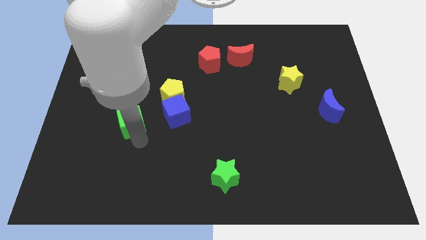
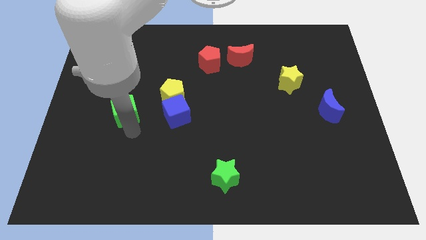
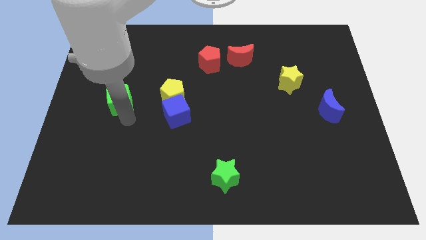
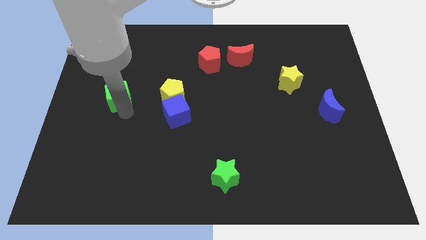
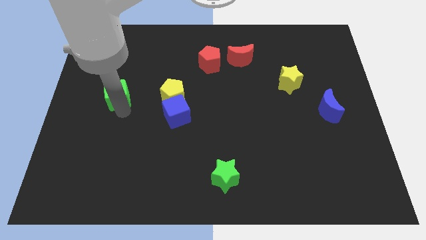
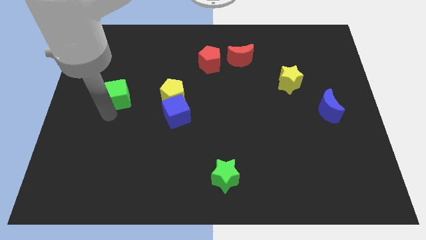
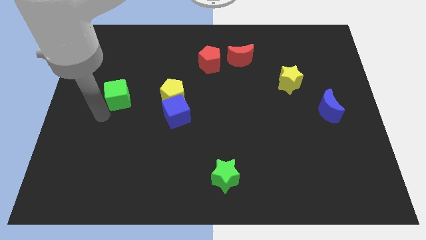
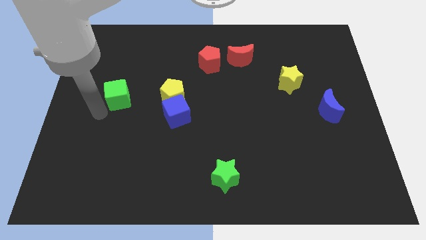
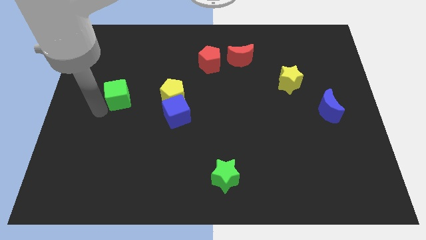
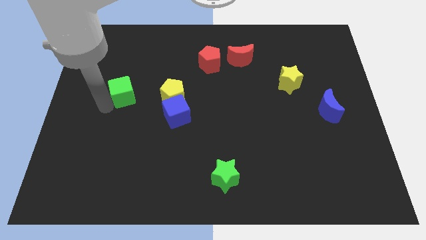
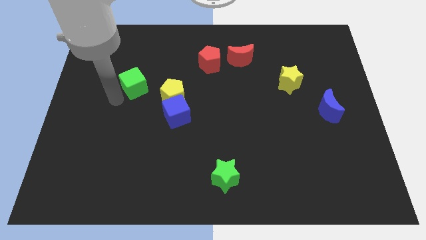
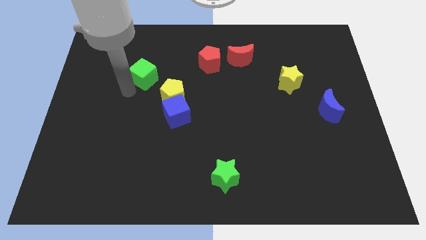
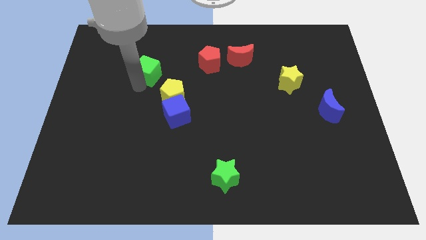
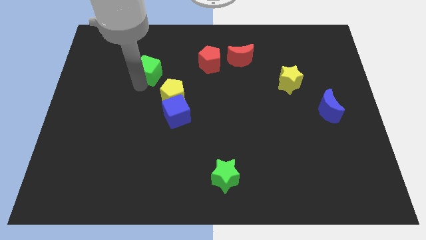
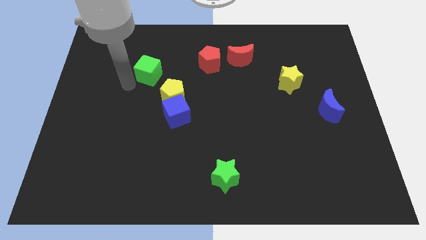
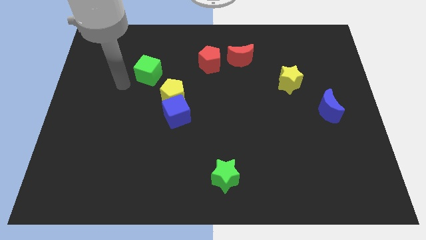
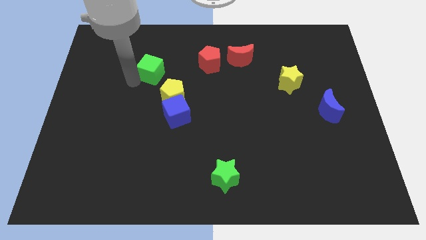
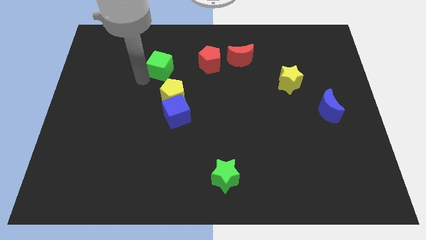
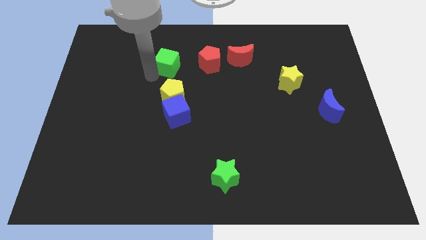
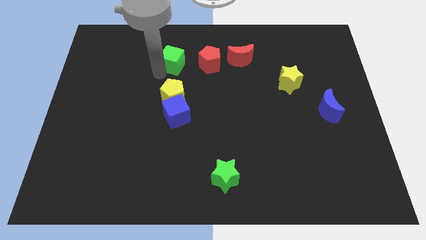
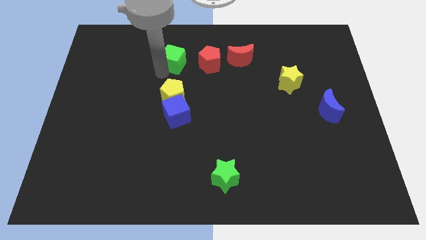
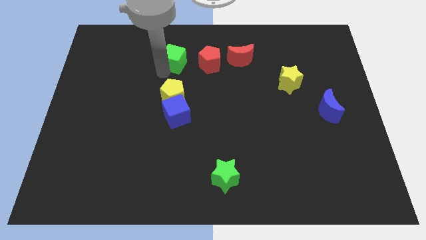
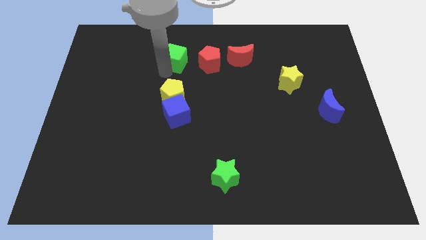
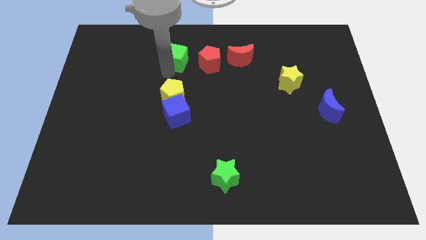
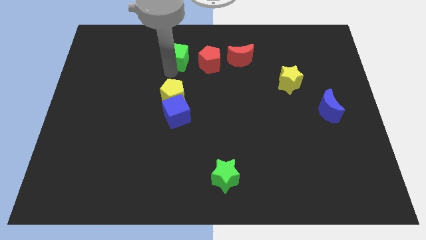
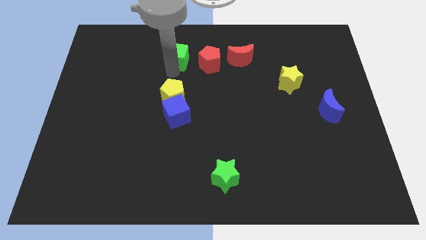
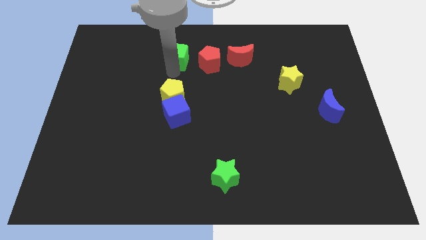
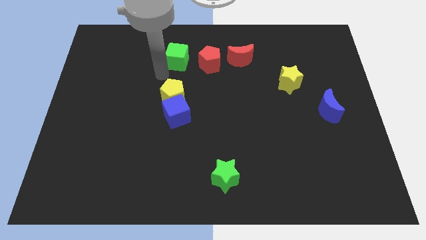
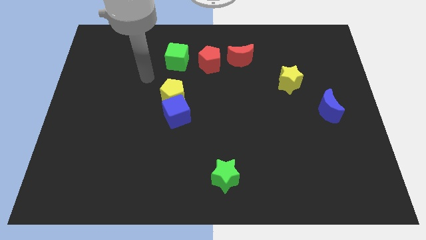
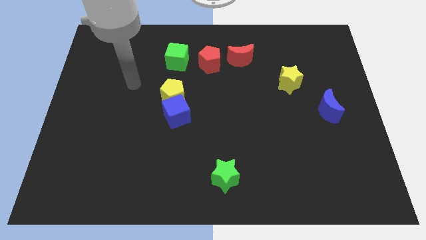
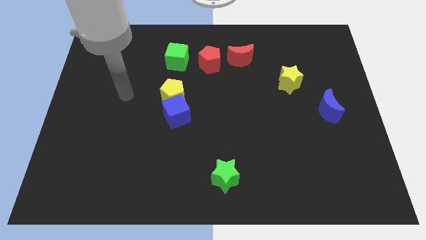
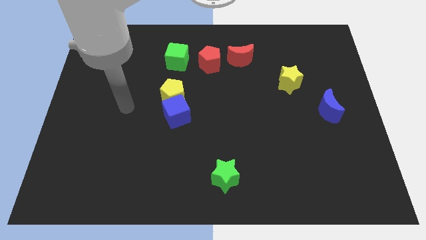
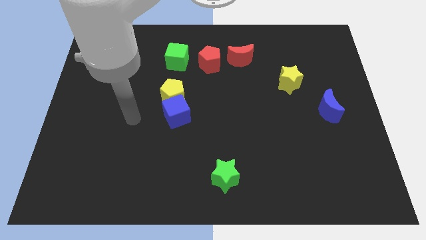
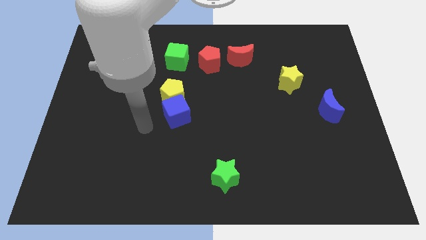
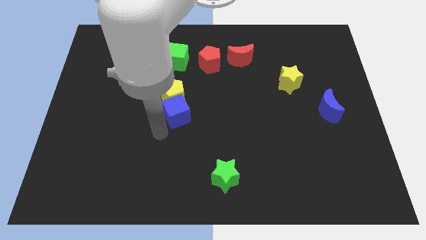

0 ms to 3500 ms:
put the green cube to the left of the red pentagon

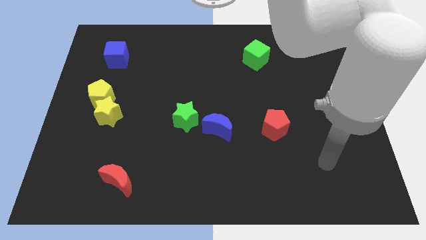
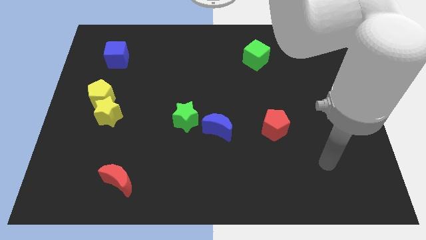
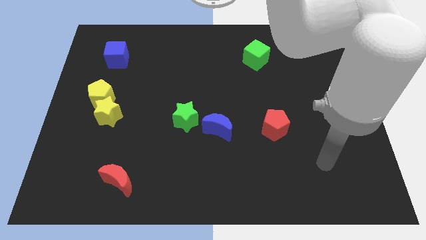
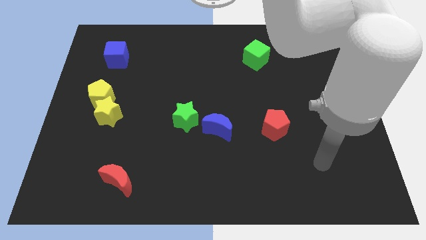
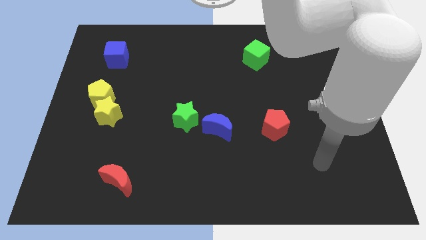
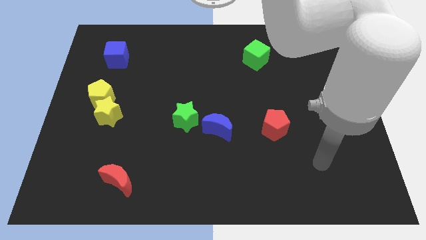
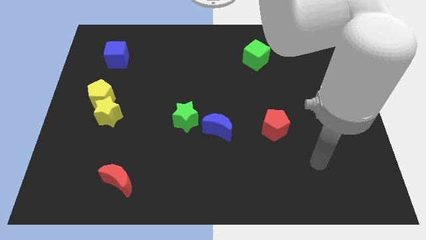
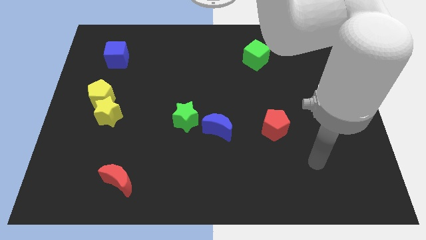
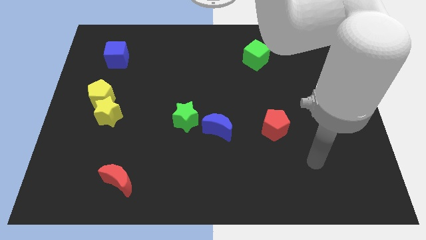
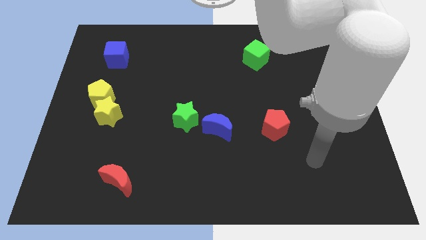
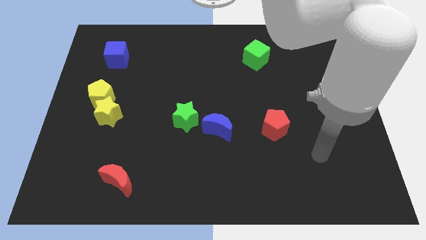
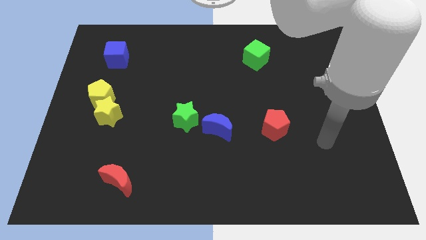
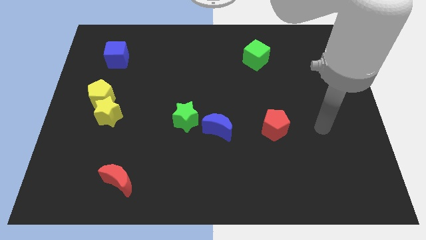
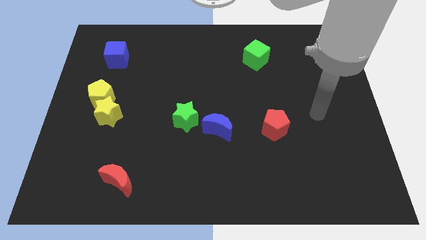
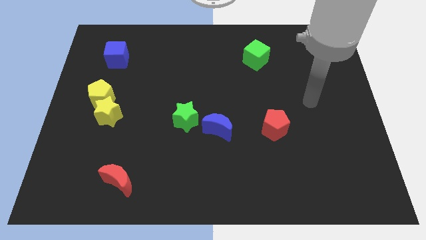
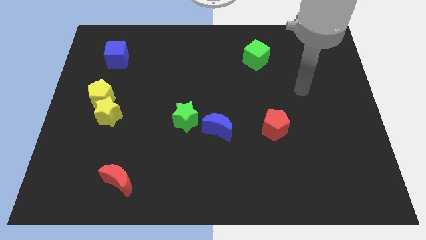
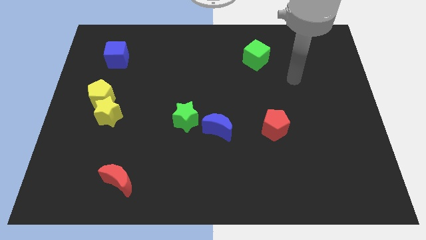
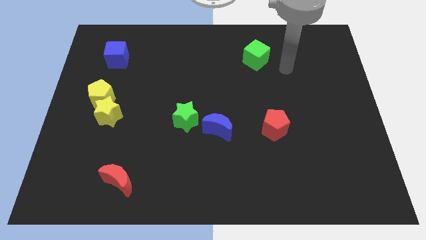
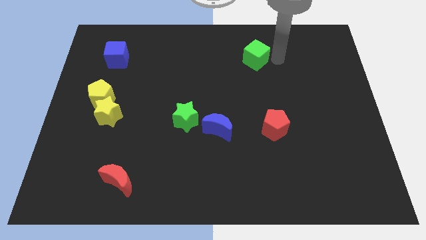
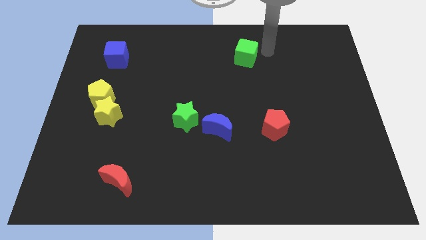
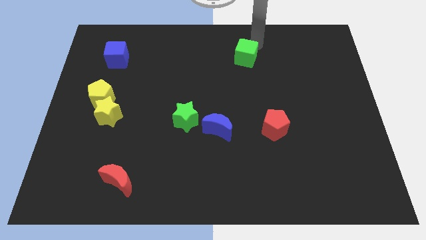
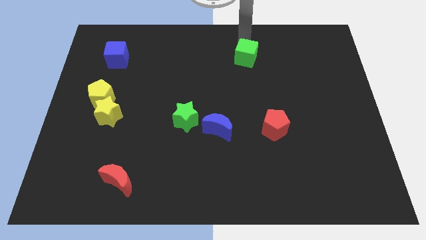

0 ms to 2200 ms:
touch the top of the green cube

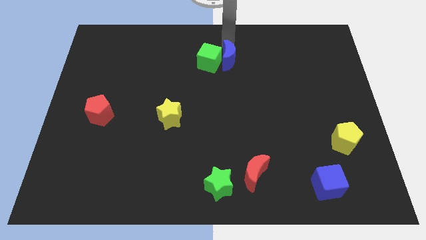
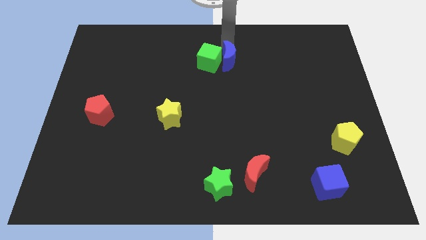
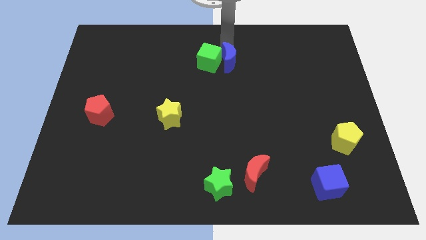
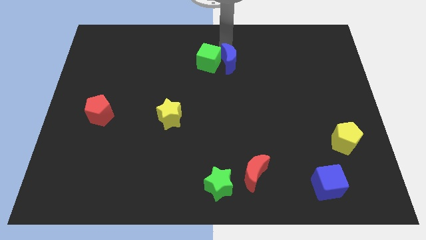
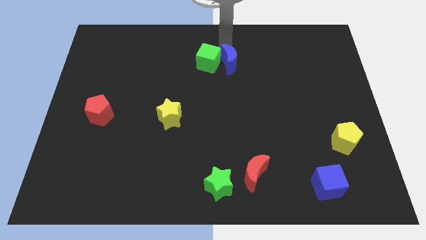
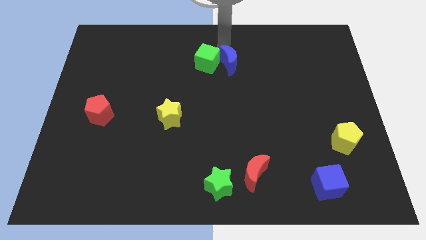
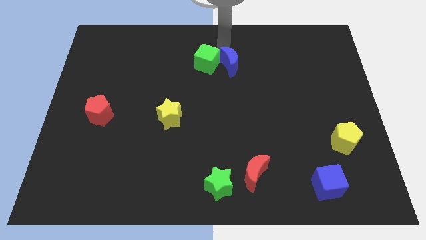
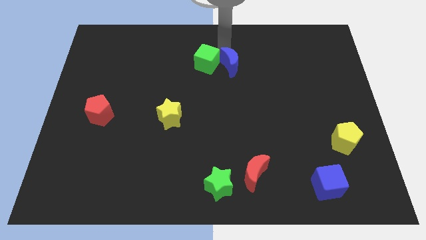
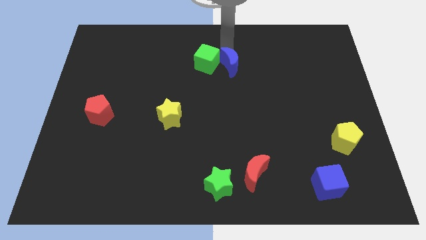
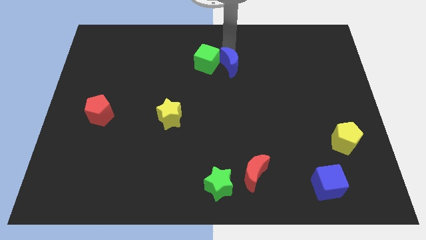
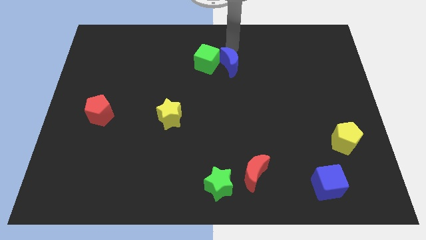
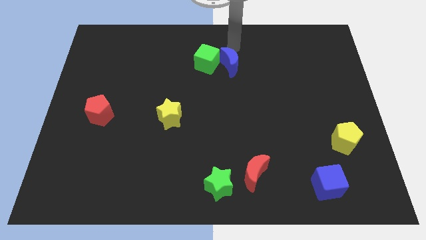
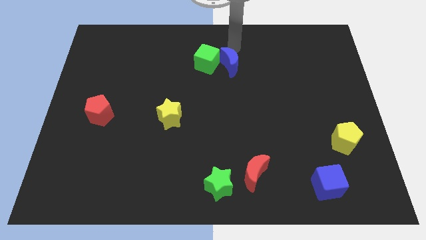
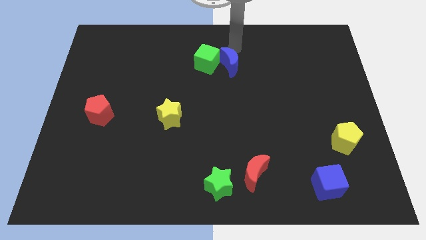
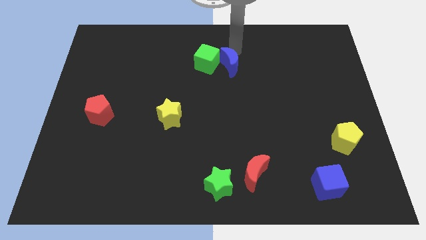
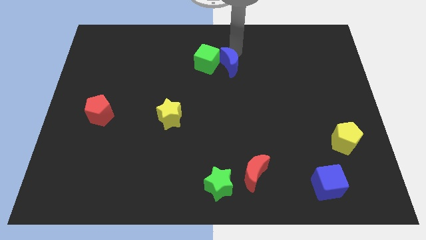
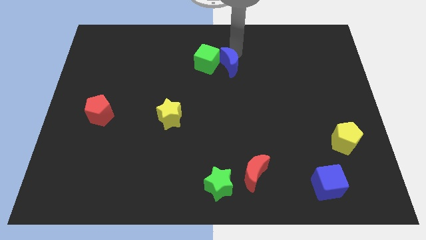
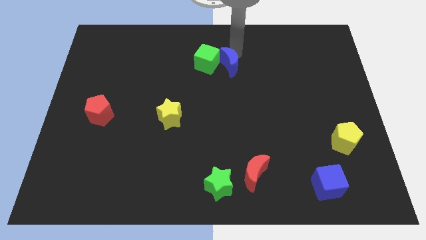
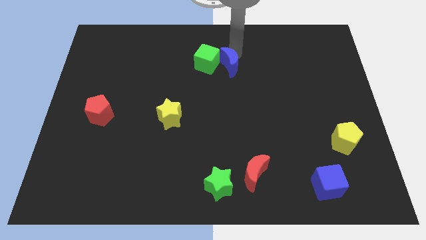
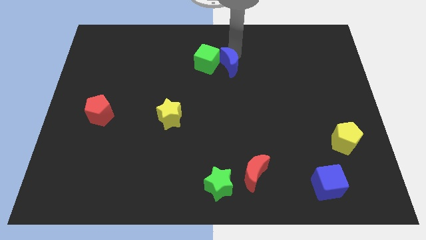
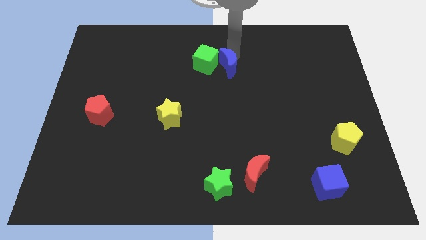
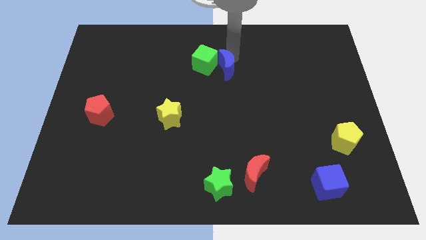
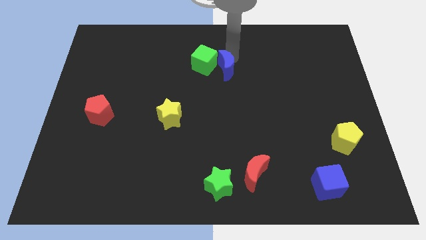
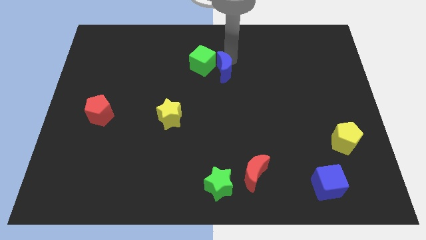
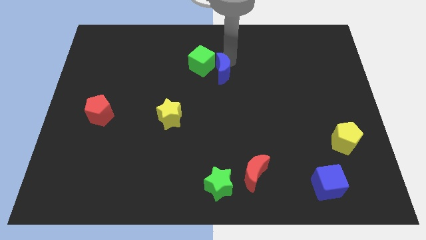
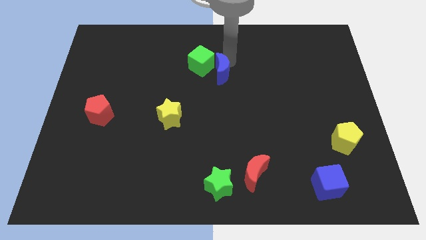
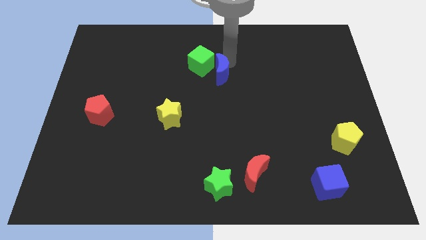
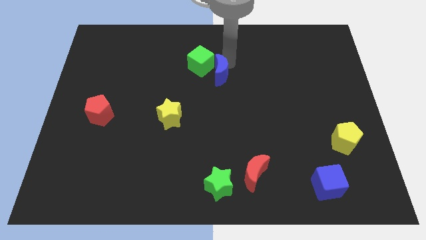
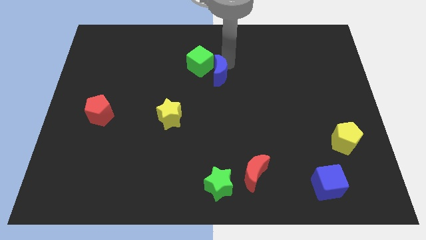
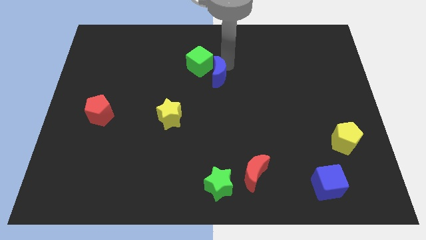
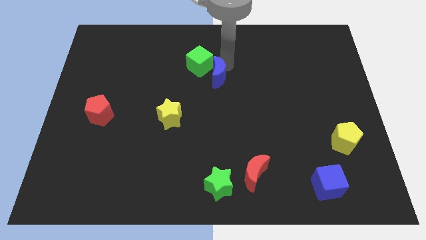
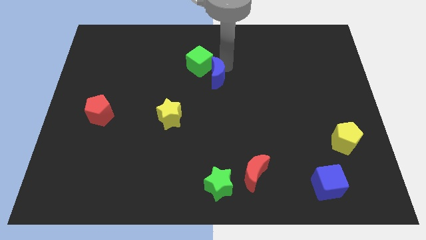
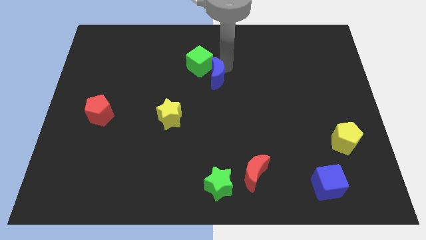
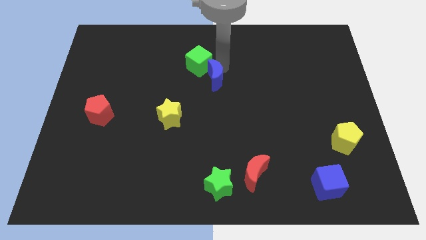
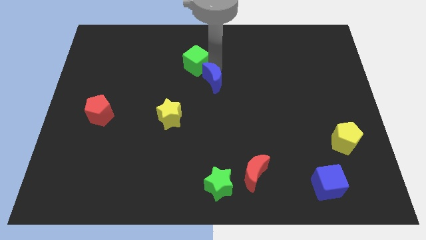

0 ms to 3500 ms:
move green cube and blue crescent towards yellow star
